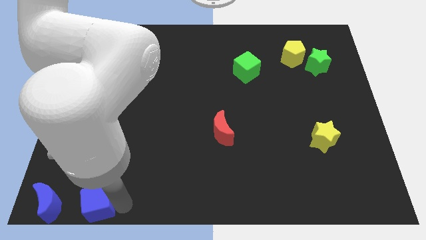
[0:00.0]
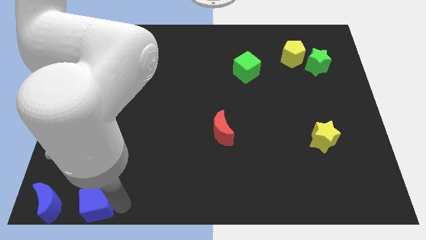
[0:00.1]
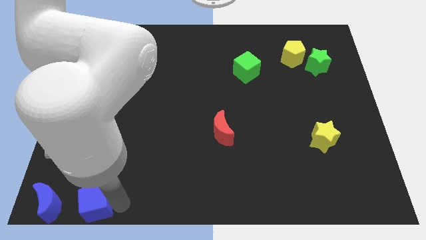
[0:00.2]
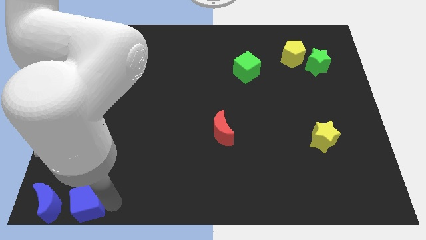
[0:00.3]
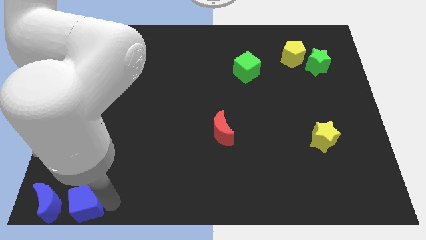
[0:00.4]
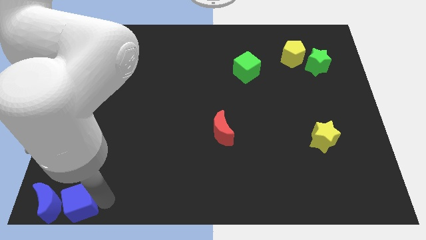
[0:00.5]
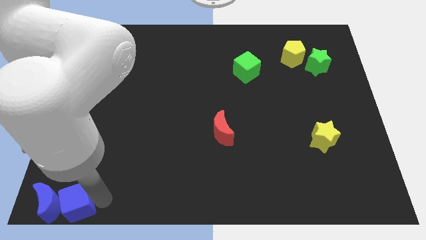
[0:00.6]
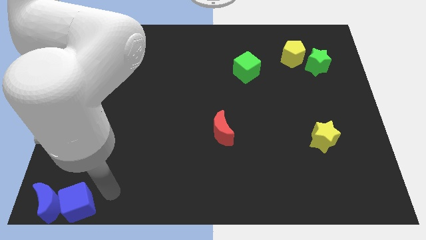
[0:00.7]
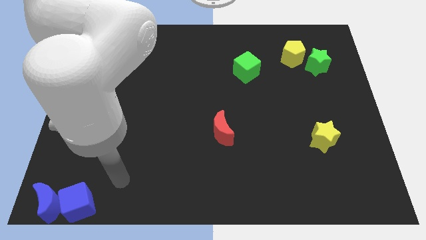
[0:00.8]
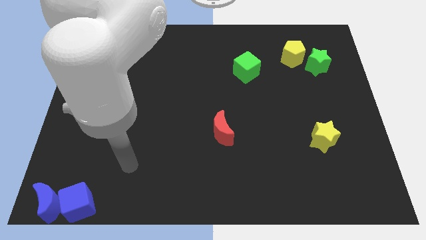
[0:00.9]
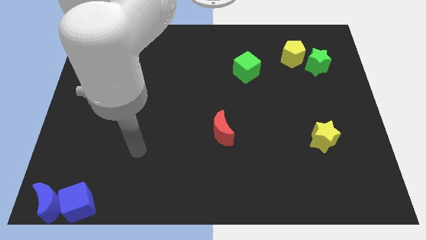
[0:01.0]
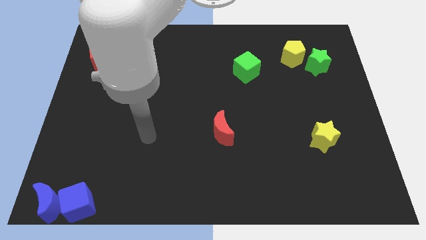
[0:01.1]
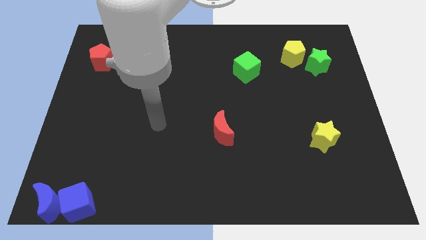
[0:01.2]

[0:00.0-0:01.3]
place blue cube to the right of blue moon

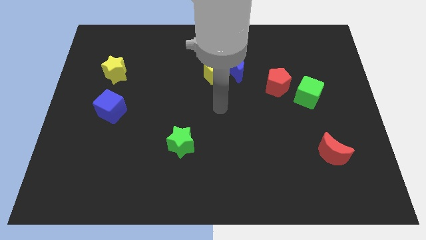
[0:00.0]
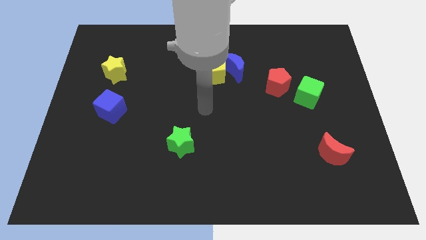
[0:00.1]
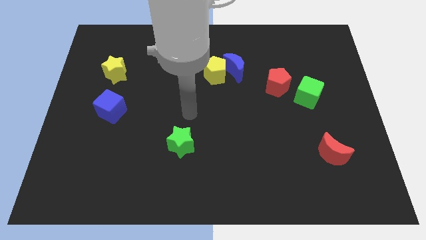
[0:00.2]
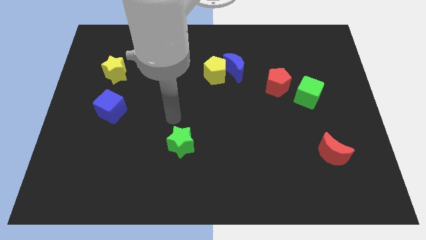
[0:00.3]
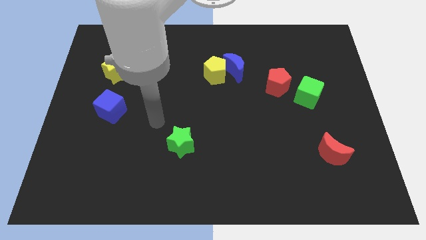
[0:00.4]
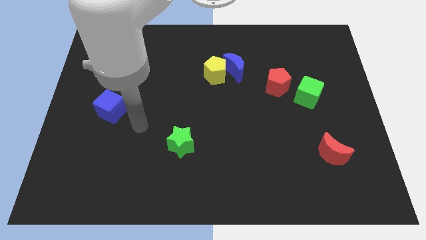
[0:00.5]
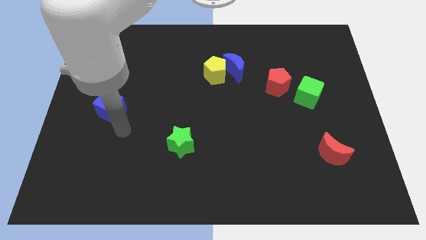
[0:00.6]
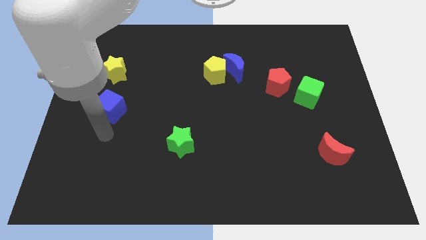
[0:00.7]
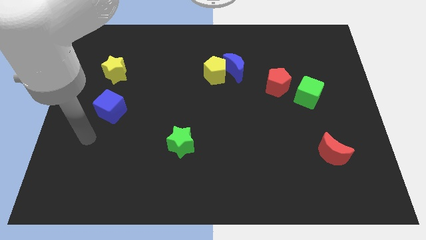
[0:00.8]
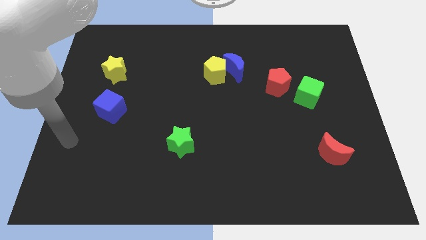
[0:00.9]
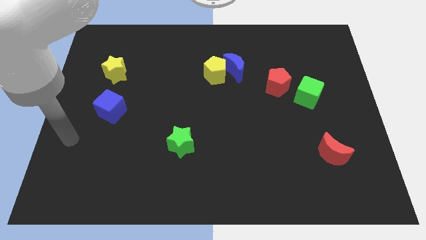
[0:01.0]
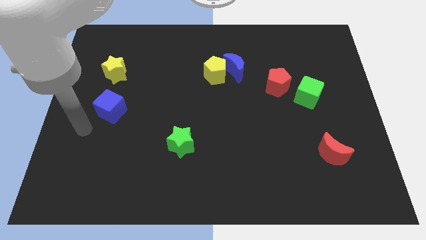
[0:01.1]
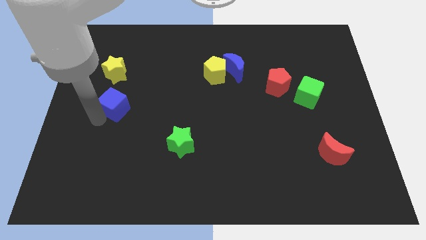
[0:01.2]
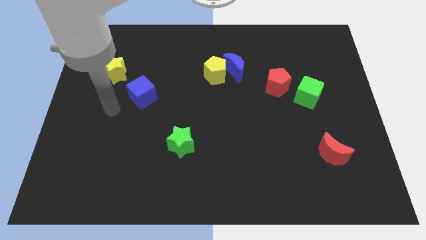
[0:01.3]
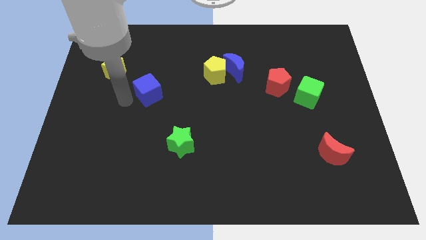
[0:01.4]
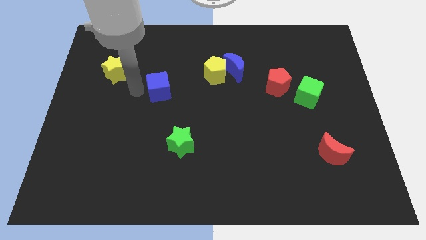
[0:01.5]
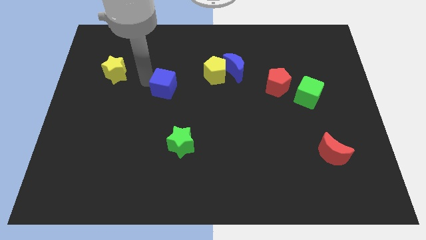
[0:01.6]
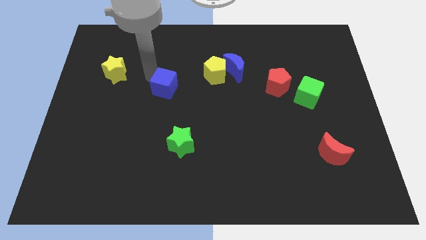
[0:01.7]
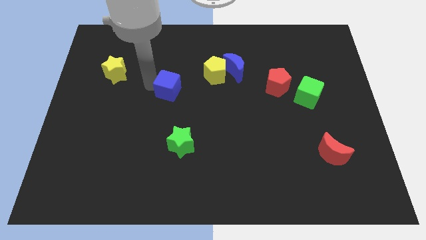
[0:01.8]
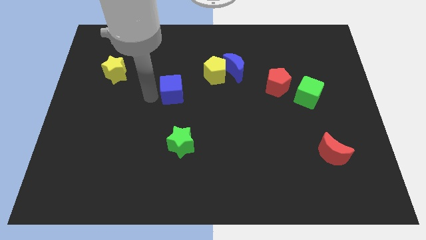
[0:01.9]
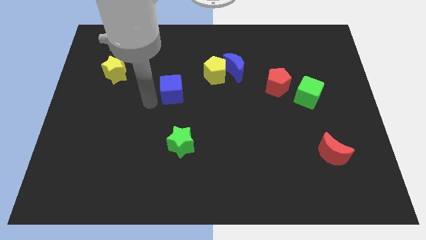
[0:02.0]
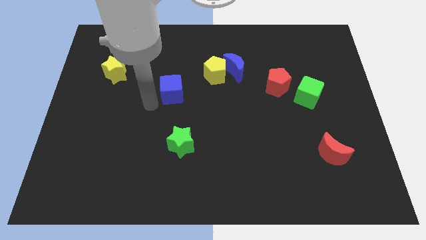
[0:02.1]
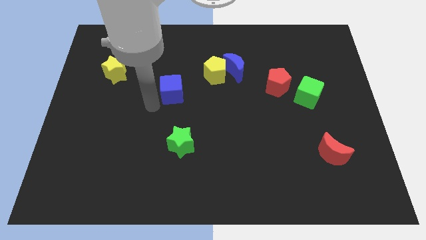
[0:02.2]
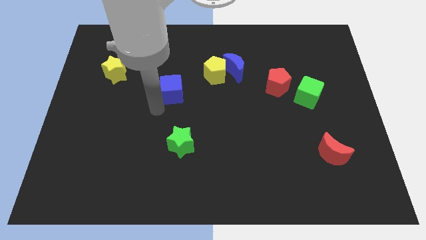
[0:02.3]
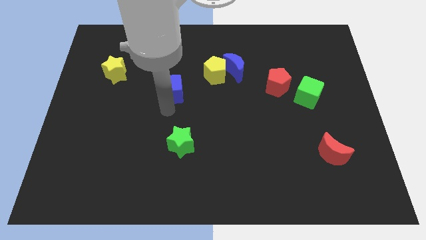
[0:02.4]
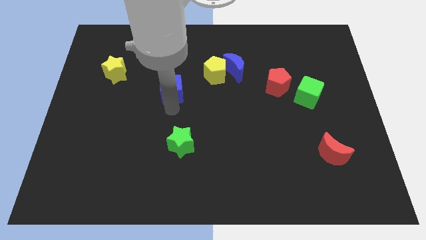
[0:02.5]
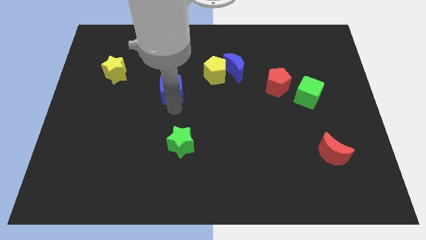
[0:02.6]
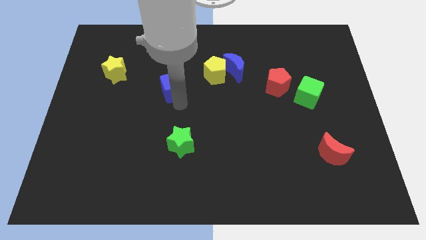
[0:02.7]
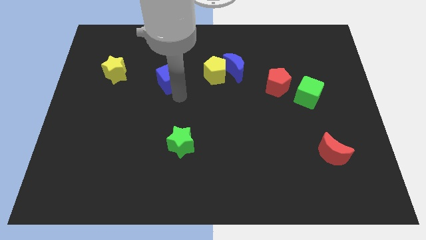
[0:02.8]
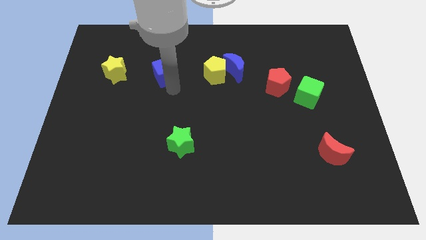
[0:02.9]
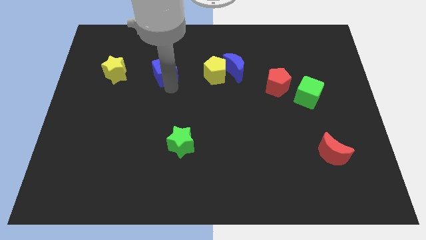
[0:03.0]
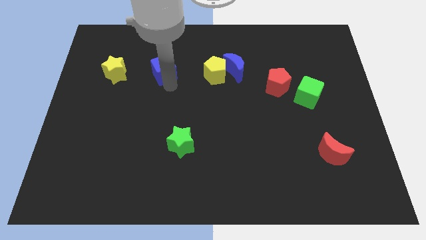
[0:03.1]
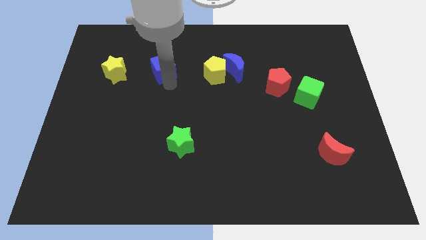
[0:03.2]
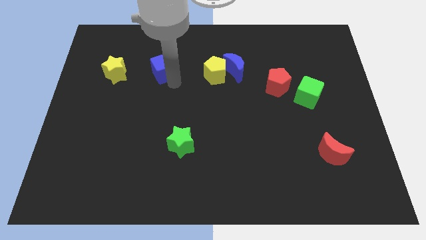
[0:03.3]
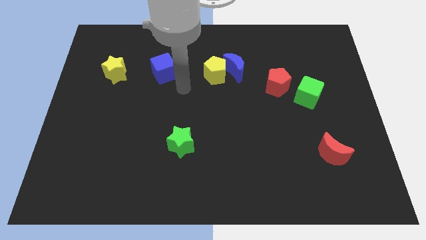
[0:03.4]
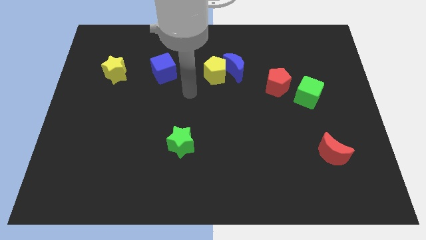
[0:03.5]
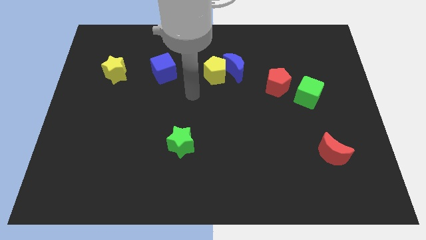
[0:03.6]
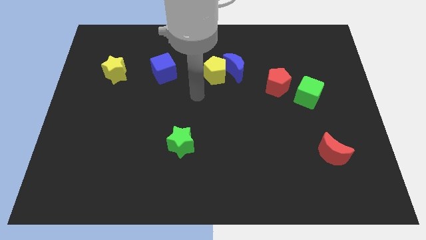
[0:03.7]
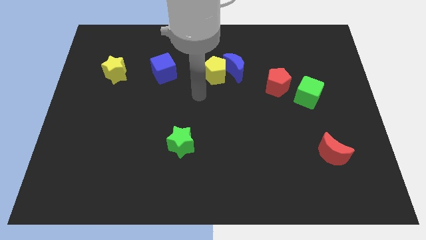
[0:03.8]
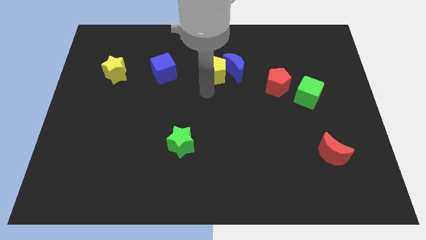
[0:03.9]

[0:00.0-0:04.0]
place the blue cube to the right of the yellow star

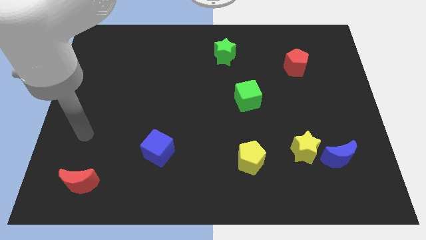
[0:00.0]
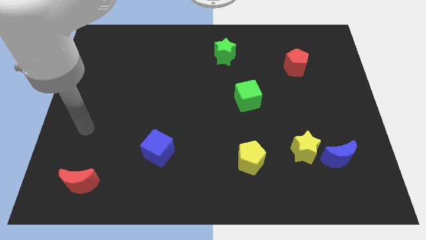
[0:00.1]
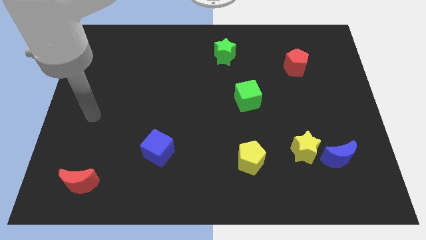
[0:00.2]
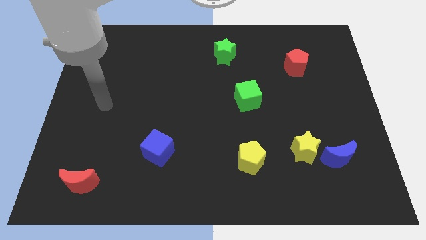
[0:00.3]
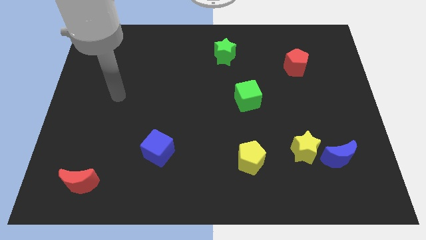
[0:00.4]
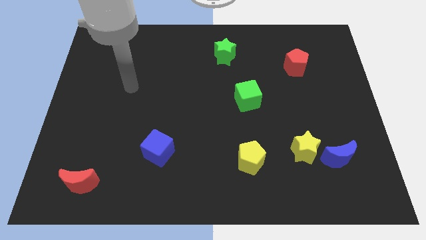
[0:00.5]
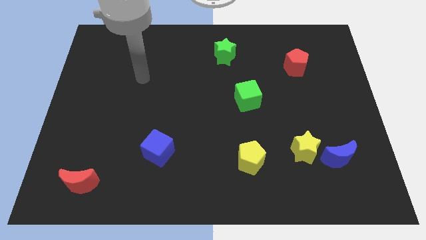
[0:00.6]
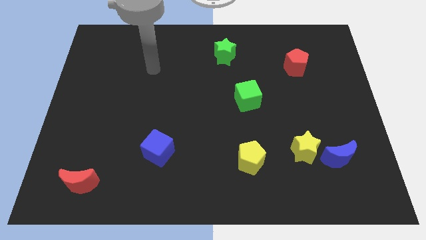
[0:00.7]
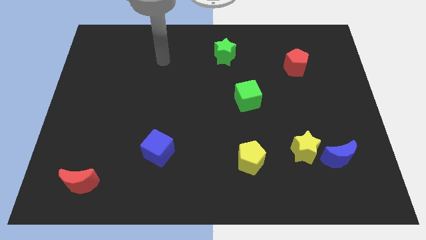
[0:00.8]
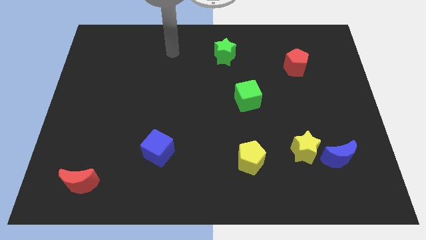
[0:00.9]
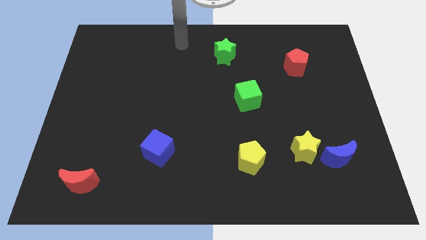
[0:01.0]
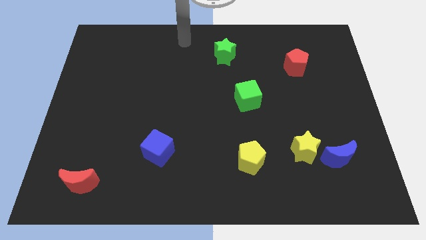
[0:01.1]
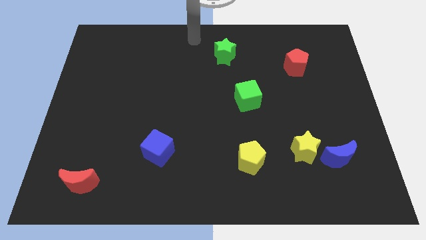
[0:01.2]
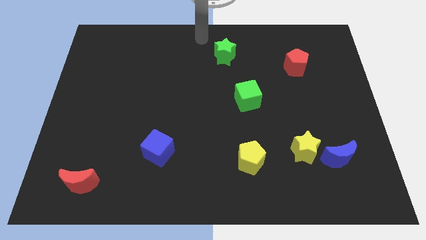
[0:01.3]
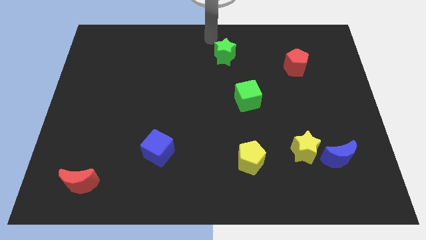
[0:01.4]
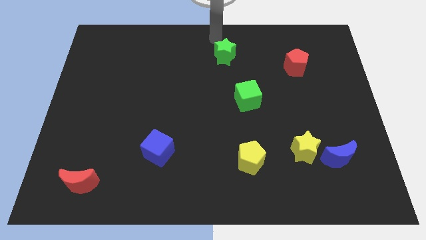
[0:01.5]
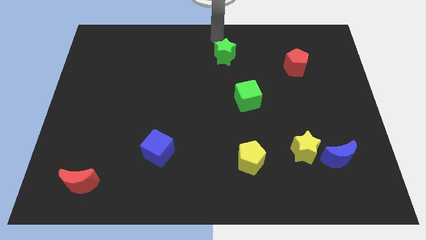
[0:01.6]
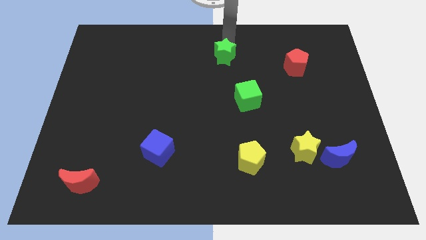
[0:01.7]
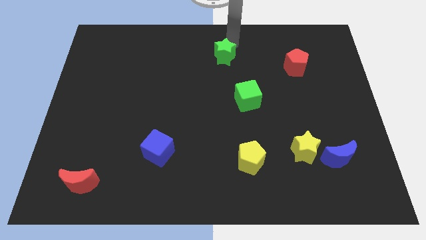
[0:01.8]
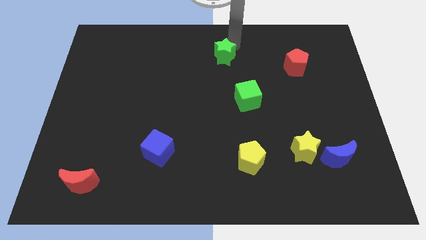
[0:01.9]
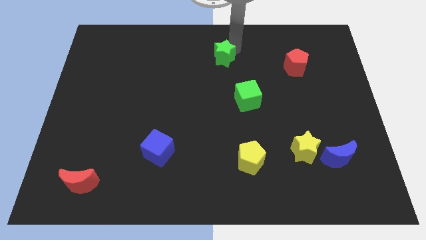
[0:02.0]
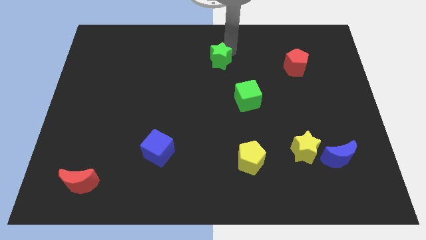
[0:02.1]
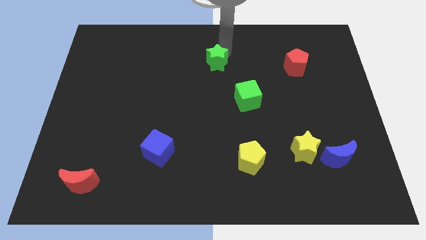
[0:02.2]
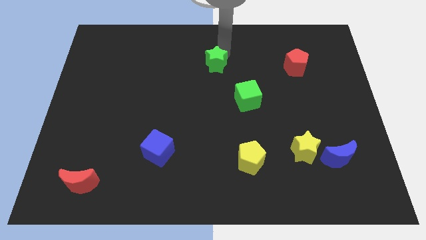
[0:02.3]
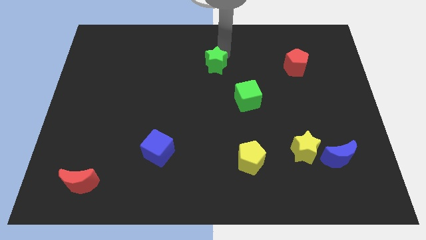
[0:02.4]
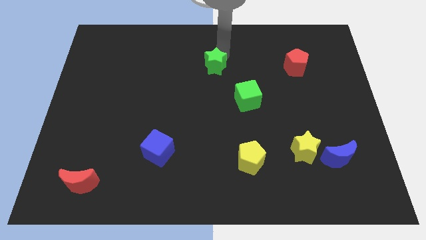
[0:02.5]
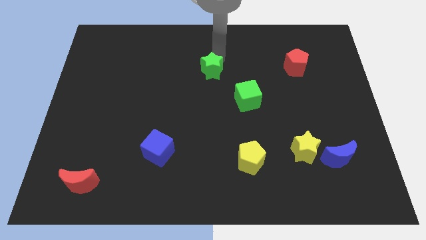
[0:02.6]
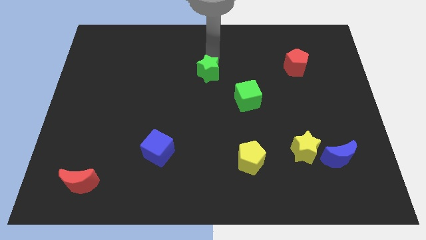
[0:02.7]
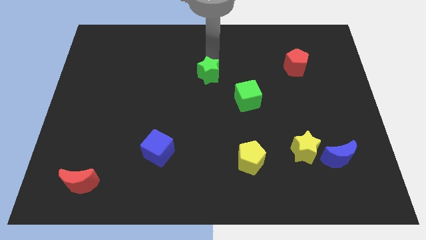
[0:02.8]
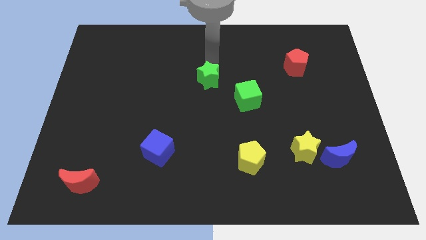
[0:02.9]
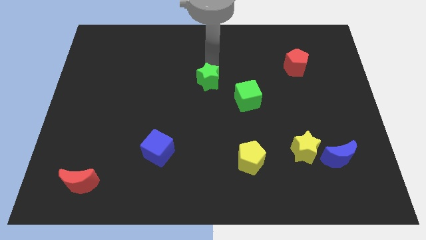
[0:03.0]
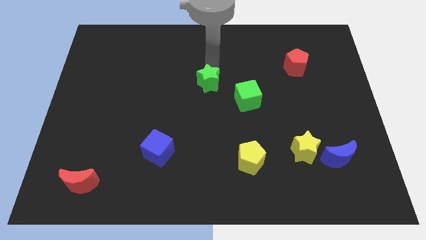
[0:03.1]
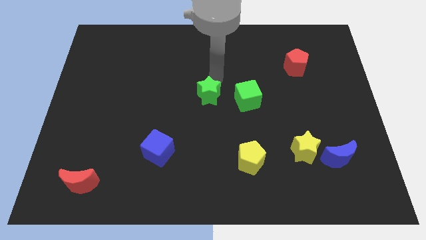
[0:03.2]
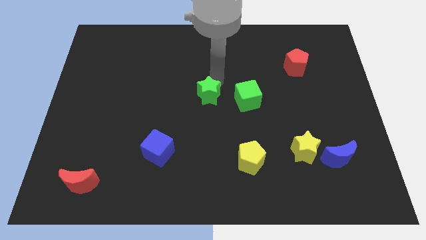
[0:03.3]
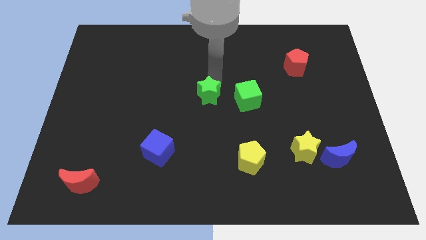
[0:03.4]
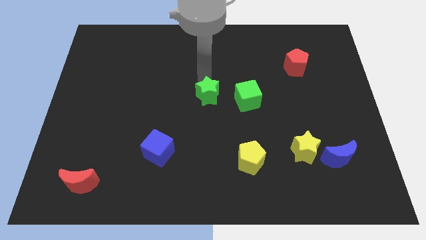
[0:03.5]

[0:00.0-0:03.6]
move the green star to the left side of the green cube

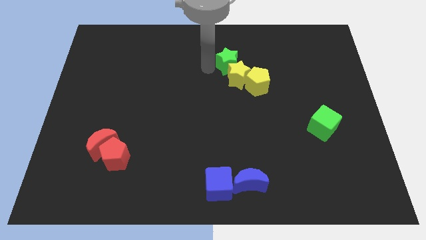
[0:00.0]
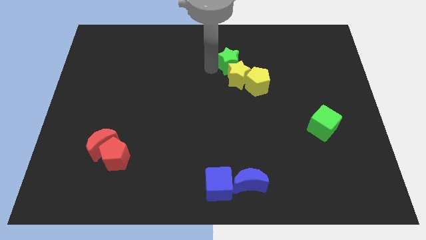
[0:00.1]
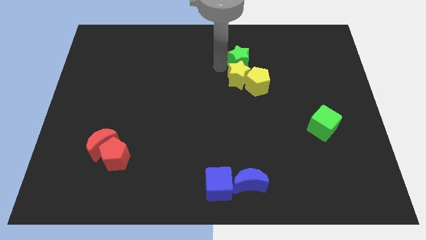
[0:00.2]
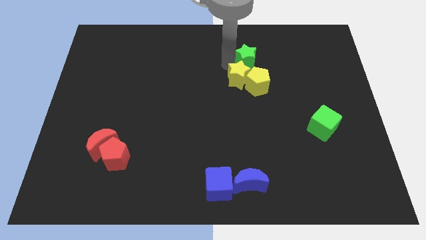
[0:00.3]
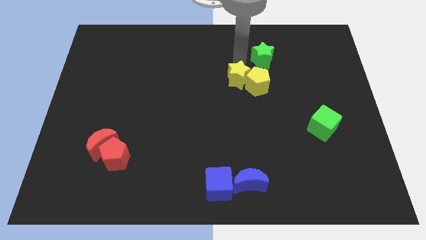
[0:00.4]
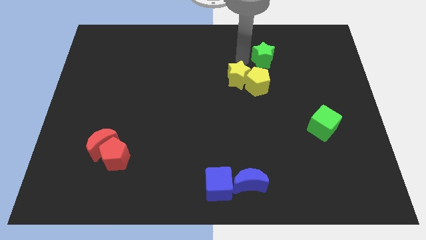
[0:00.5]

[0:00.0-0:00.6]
push the green star in between the above of yellow star and pentagon
